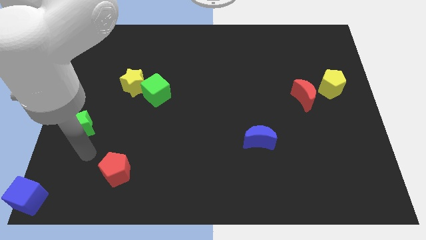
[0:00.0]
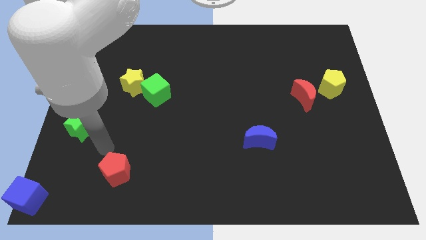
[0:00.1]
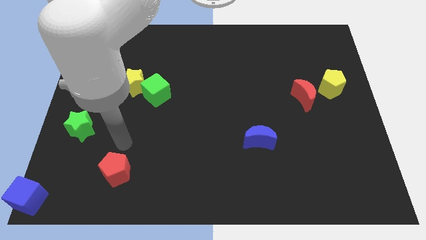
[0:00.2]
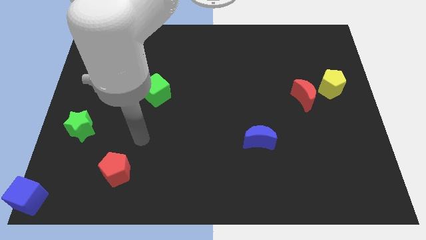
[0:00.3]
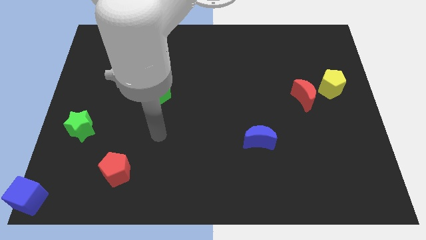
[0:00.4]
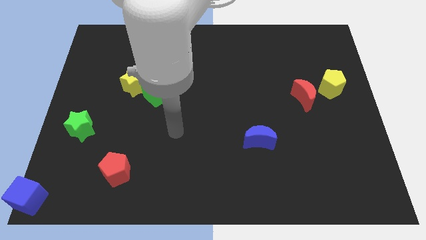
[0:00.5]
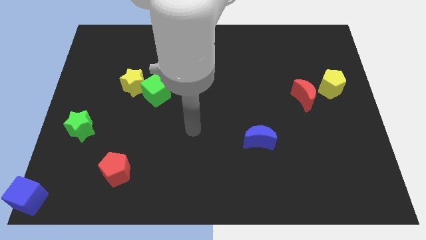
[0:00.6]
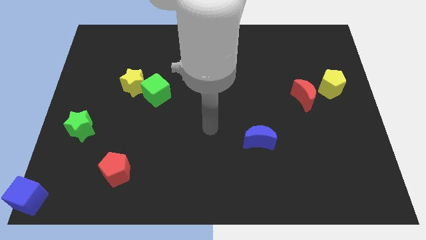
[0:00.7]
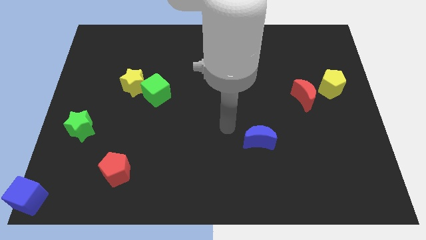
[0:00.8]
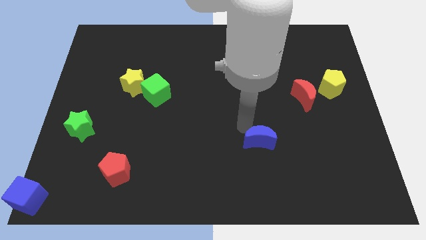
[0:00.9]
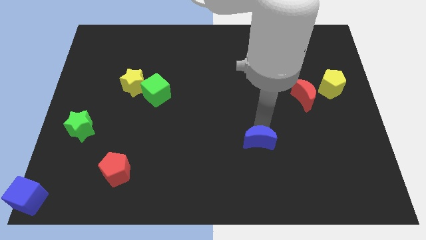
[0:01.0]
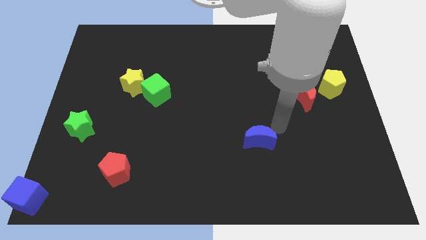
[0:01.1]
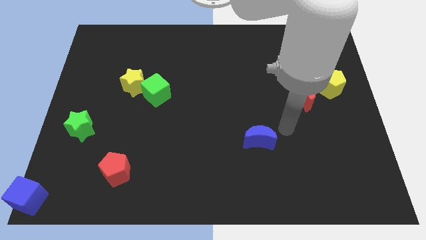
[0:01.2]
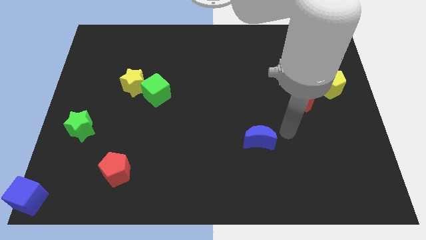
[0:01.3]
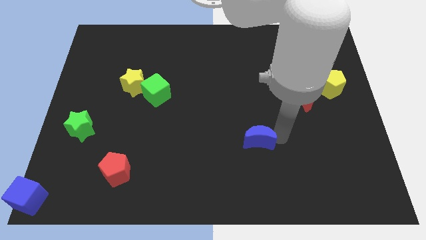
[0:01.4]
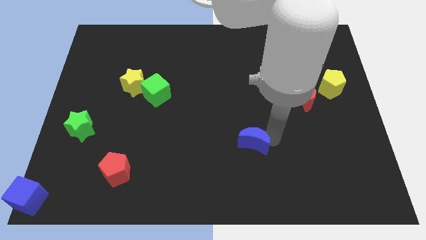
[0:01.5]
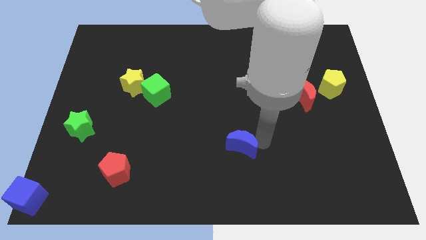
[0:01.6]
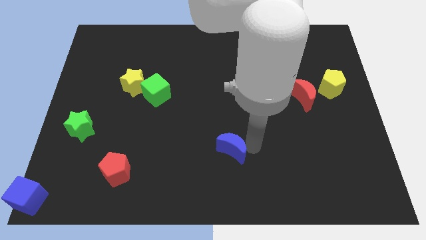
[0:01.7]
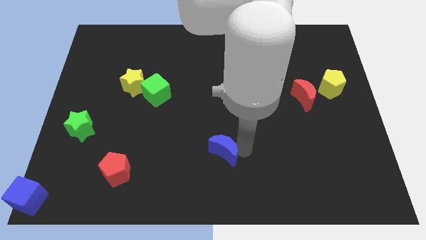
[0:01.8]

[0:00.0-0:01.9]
push the blue moon diagonally right below green cube

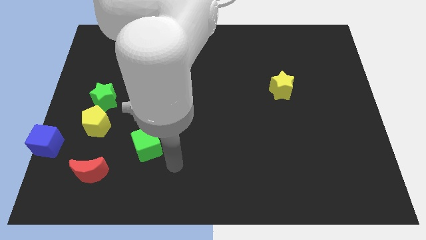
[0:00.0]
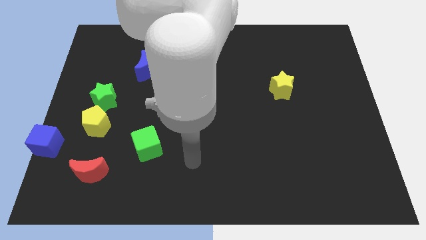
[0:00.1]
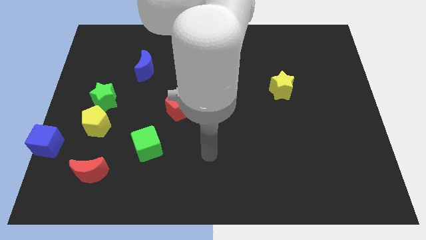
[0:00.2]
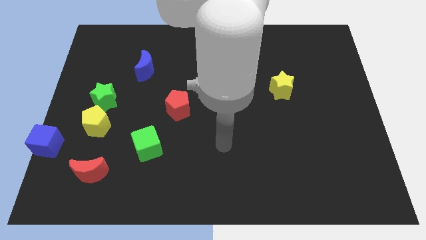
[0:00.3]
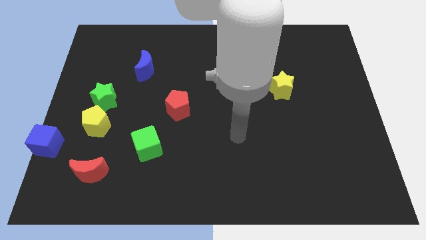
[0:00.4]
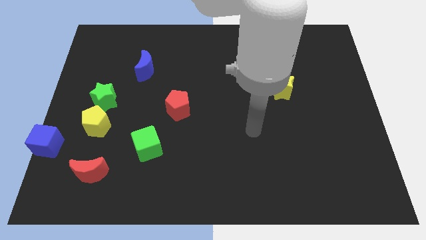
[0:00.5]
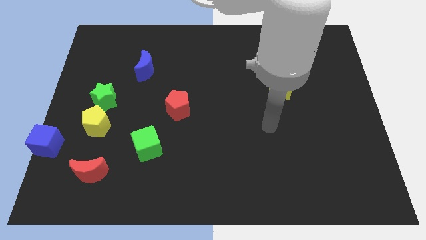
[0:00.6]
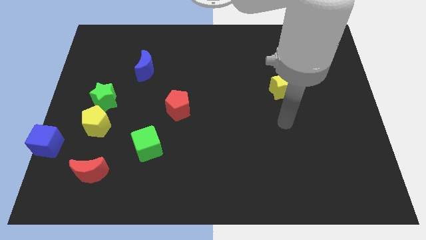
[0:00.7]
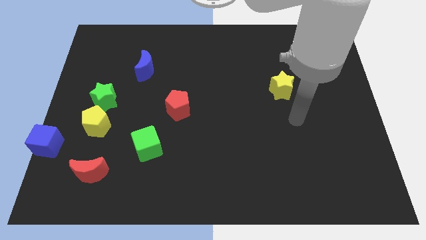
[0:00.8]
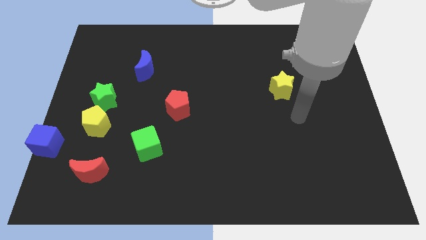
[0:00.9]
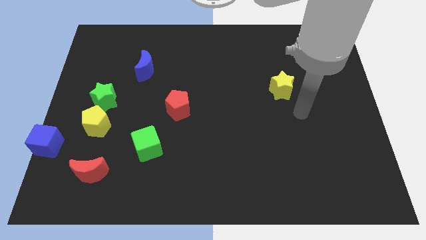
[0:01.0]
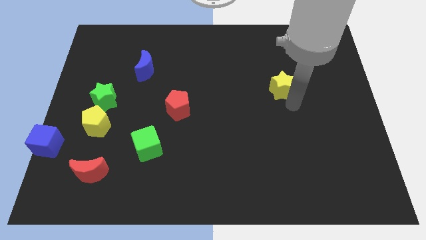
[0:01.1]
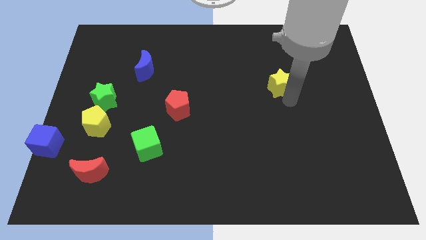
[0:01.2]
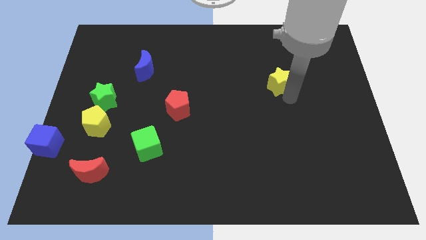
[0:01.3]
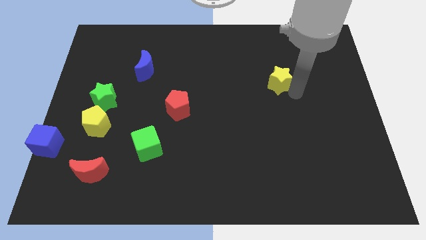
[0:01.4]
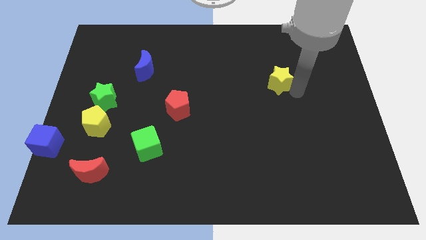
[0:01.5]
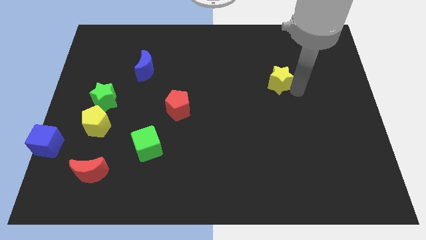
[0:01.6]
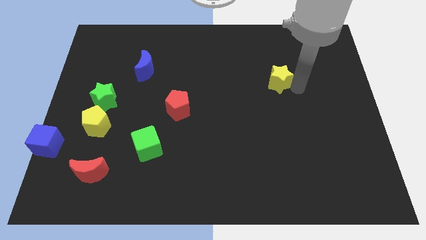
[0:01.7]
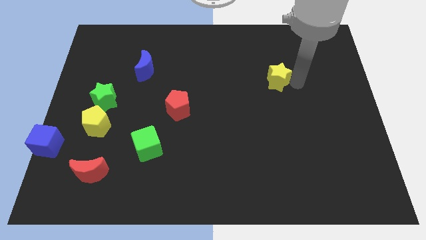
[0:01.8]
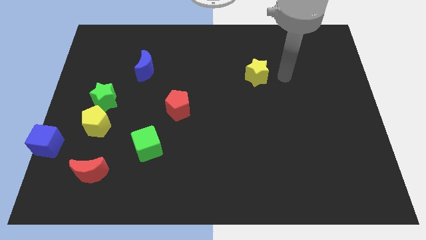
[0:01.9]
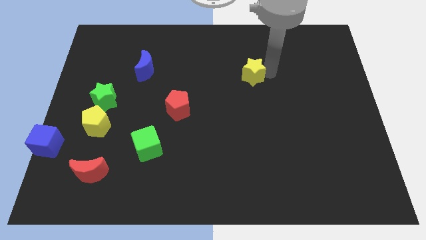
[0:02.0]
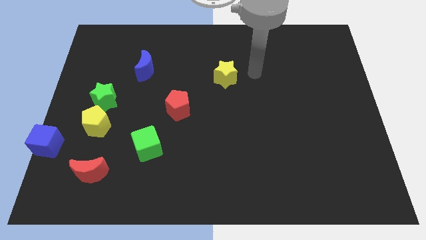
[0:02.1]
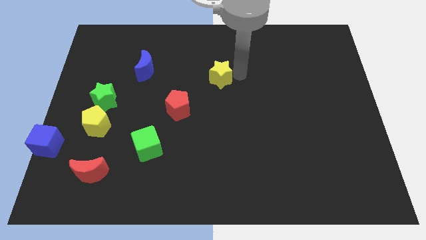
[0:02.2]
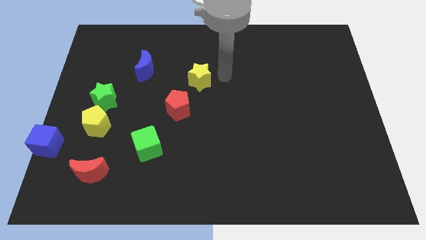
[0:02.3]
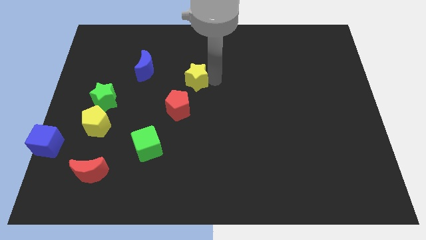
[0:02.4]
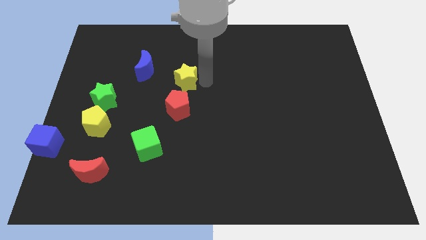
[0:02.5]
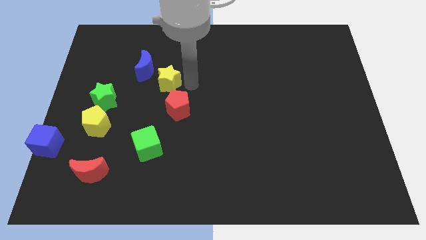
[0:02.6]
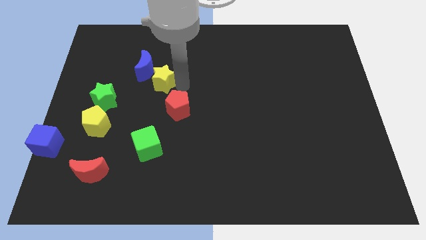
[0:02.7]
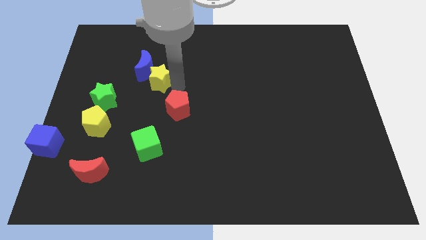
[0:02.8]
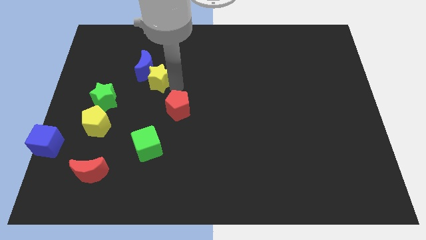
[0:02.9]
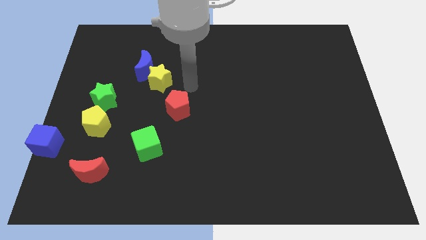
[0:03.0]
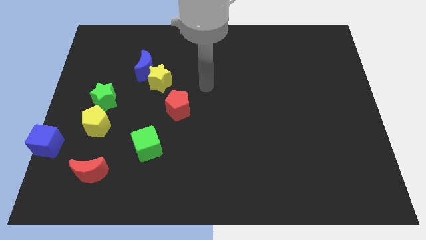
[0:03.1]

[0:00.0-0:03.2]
slide yellow star in between blue moon and red pentagon

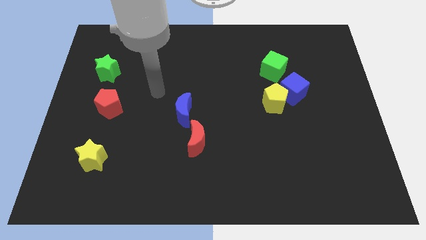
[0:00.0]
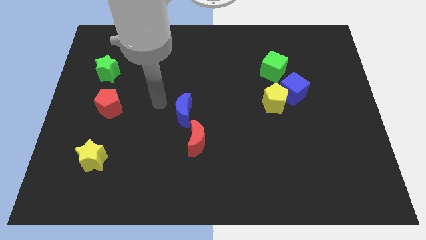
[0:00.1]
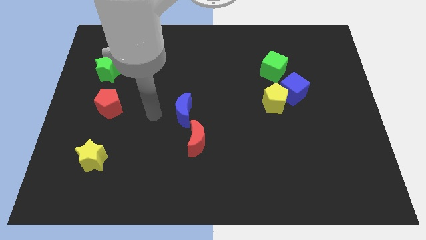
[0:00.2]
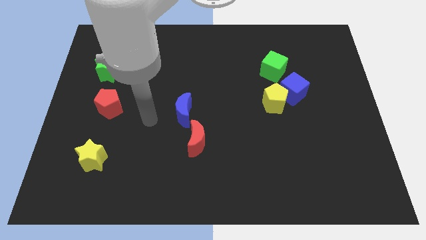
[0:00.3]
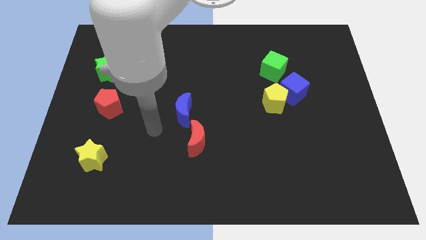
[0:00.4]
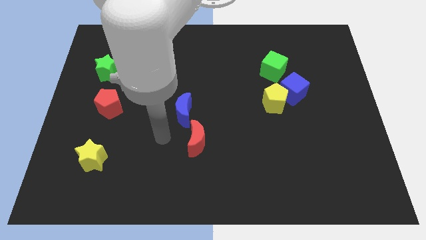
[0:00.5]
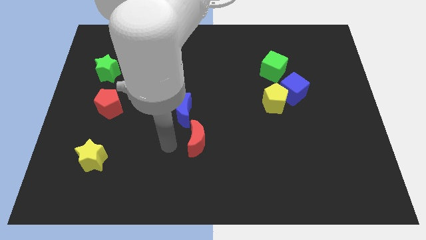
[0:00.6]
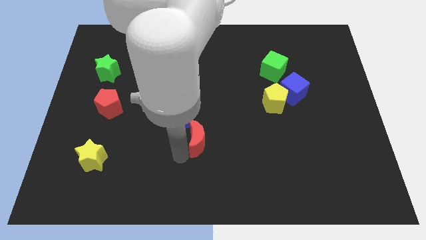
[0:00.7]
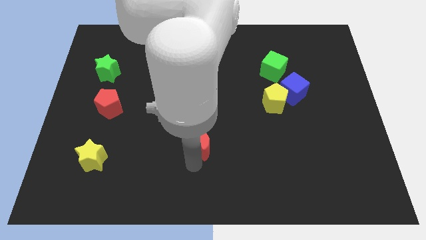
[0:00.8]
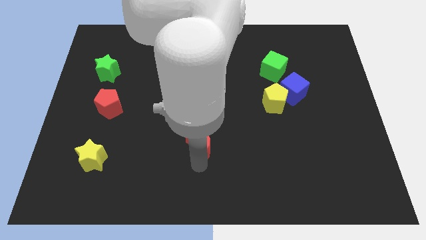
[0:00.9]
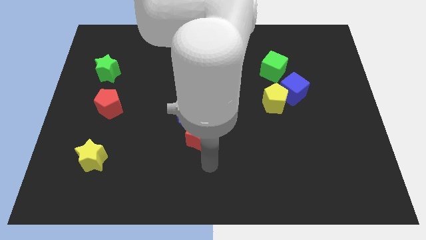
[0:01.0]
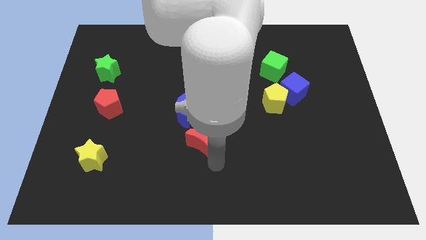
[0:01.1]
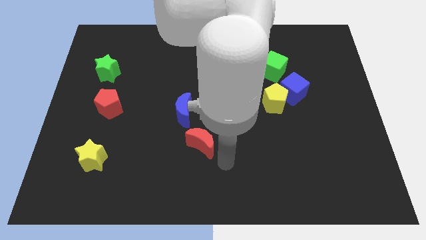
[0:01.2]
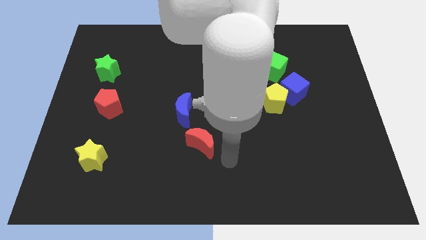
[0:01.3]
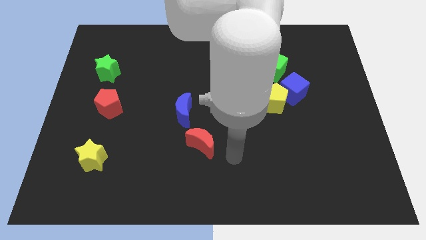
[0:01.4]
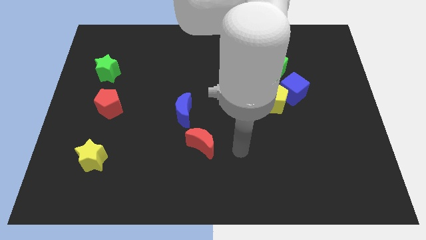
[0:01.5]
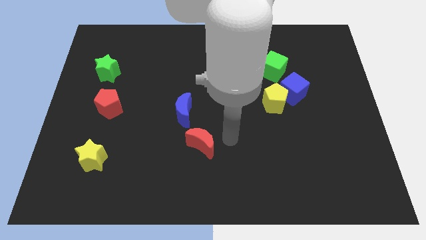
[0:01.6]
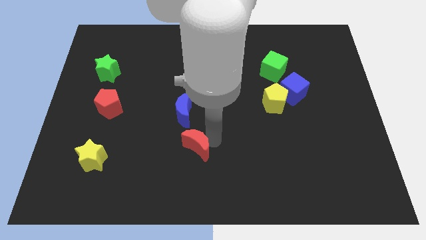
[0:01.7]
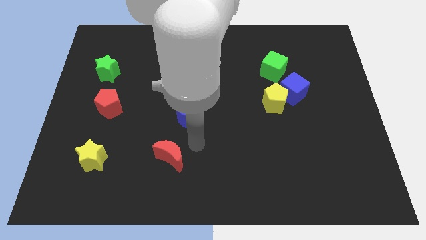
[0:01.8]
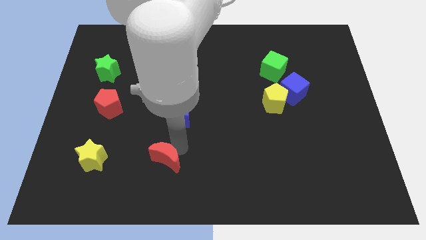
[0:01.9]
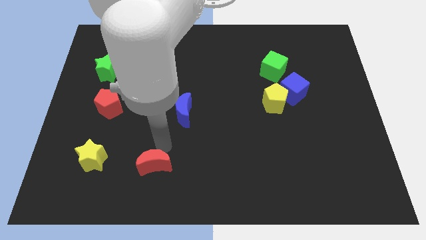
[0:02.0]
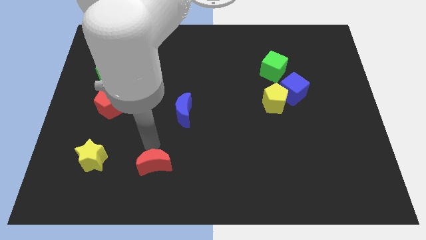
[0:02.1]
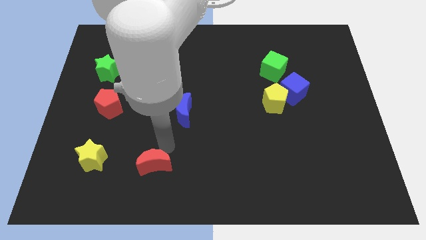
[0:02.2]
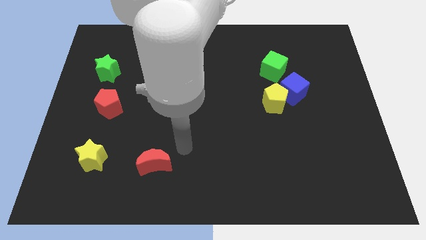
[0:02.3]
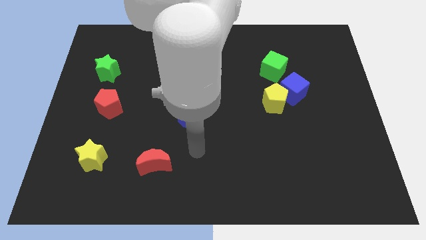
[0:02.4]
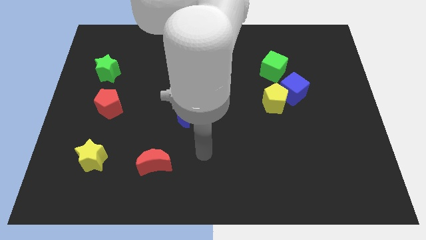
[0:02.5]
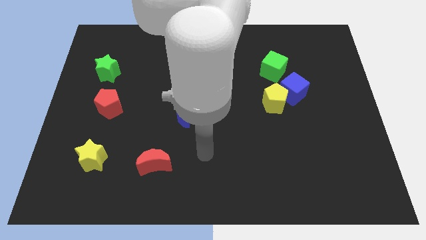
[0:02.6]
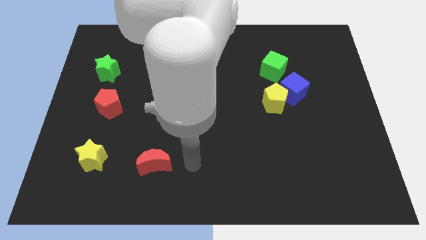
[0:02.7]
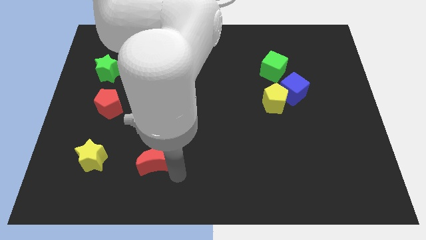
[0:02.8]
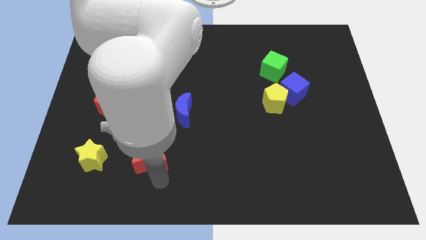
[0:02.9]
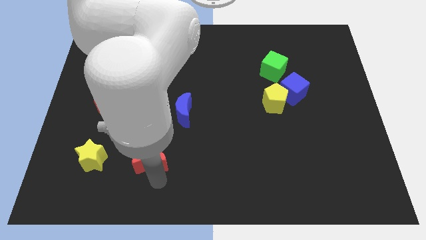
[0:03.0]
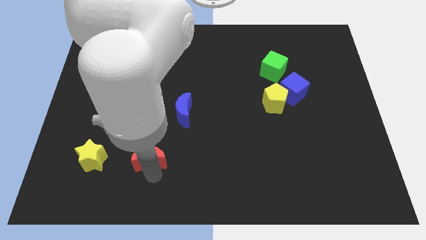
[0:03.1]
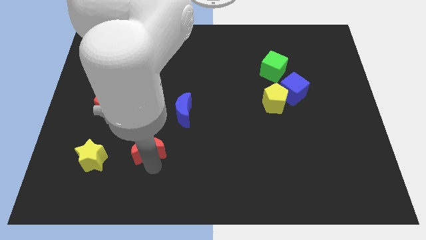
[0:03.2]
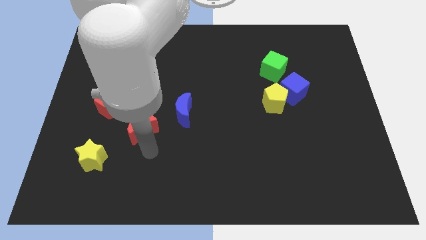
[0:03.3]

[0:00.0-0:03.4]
form a diagonal line with yellow star red moon and the blue moon

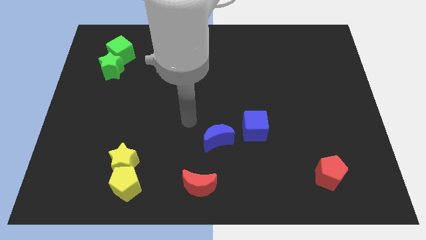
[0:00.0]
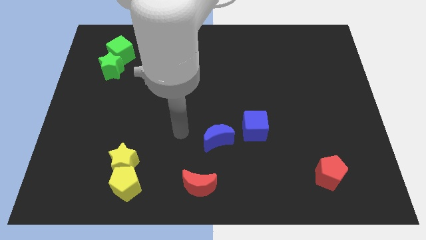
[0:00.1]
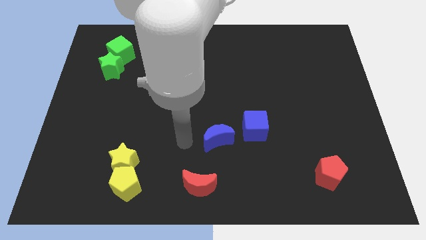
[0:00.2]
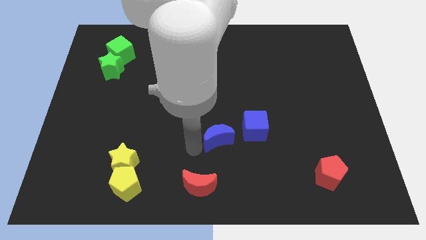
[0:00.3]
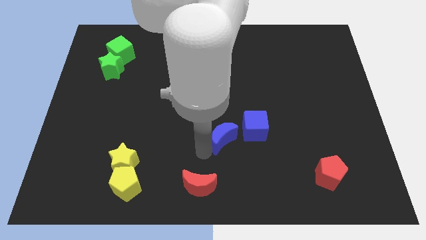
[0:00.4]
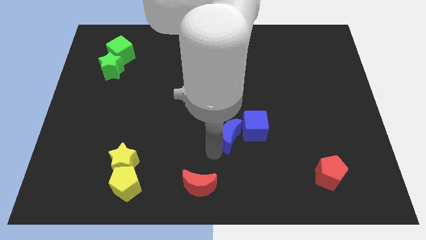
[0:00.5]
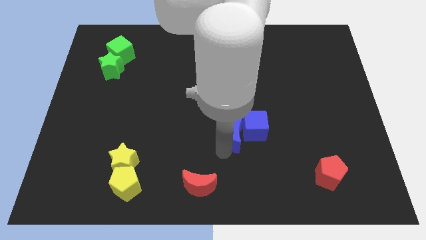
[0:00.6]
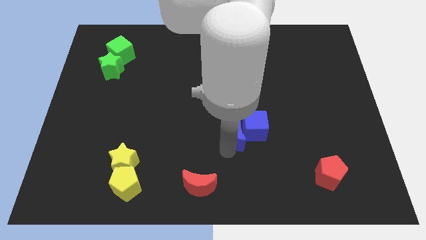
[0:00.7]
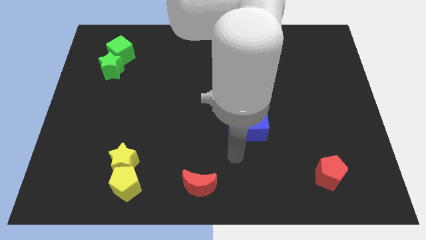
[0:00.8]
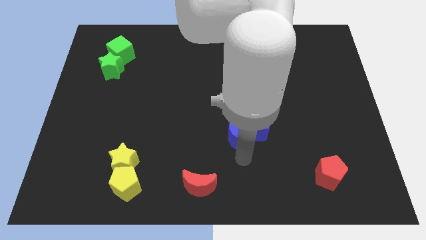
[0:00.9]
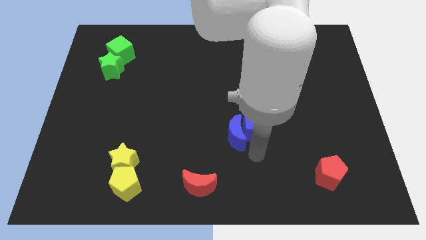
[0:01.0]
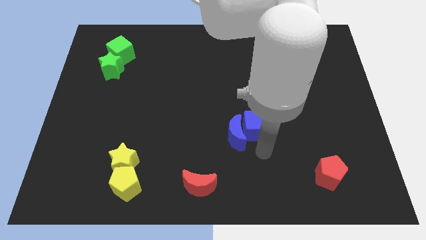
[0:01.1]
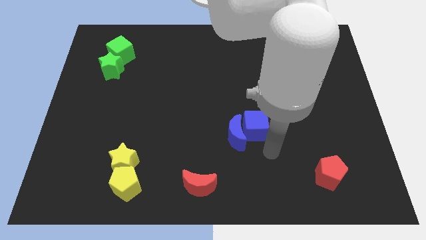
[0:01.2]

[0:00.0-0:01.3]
push the blue moon into the blue cube
